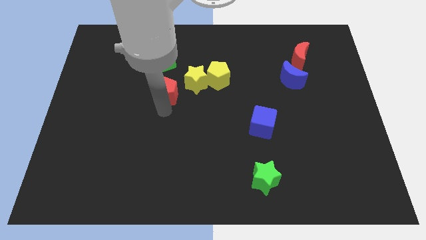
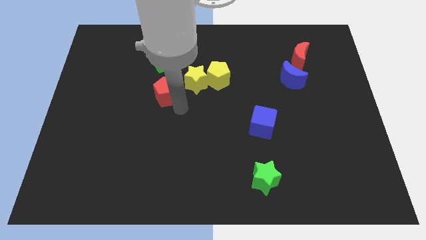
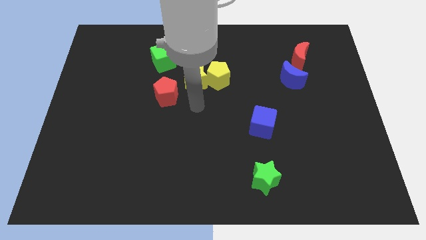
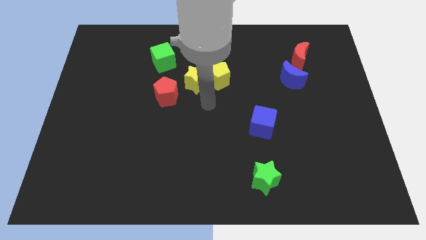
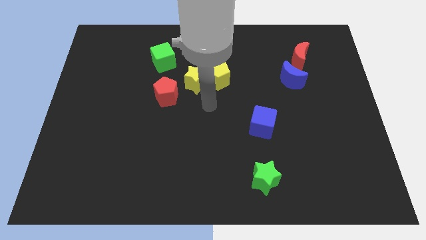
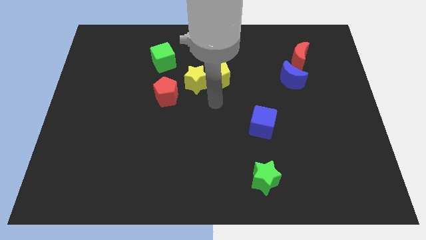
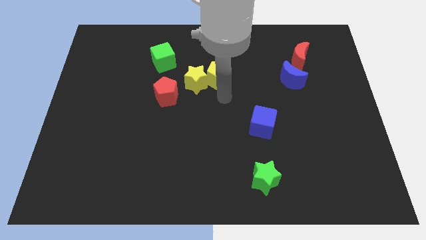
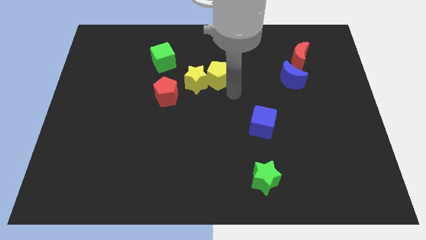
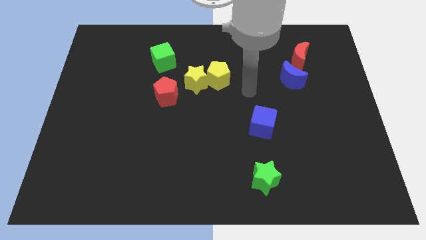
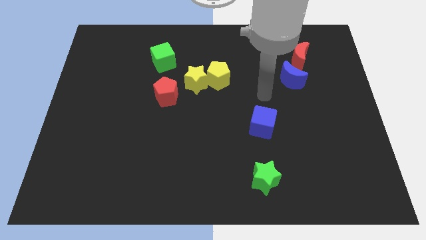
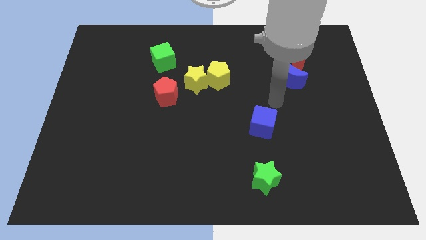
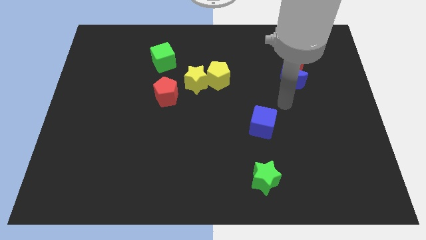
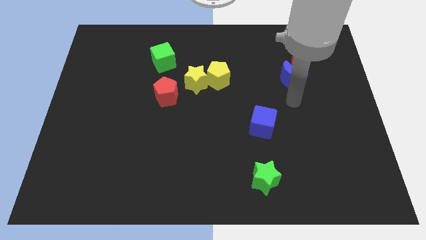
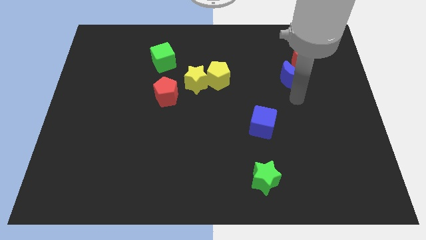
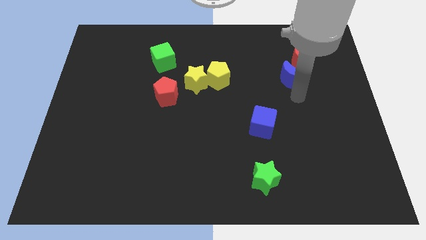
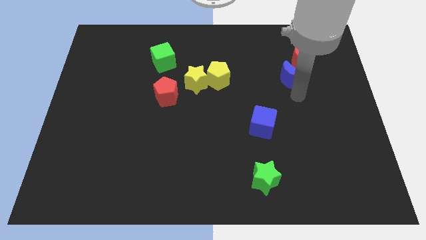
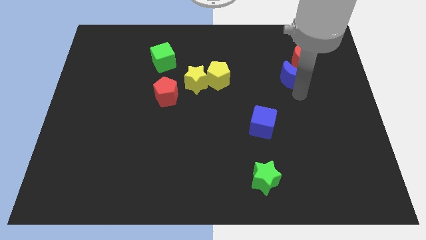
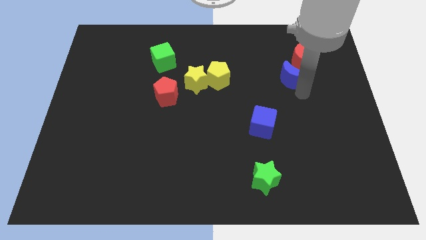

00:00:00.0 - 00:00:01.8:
move your arm towards blue crescent

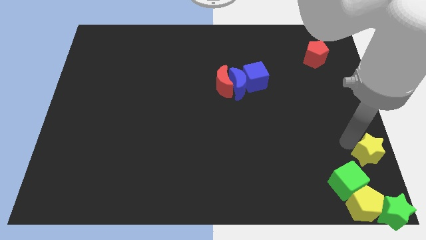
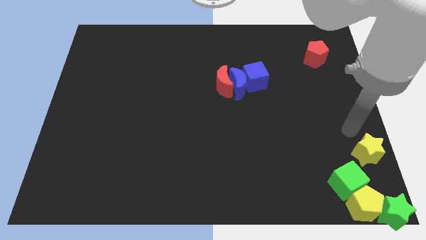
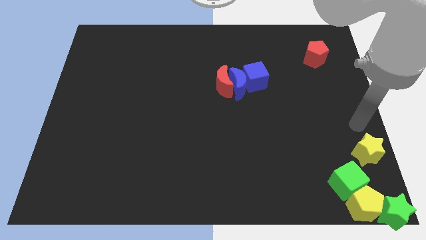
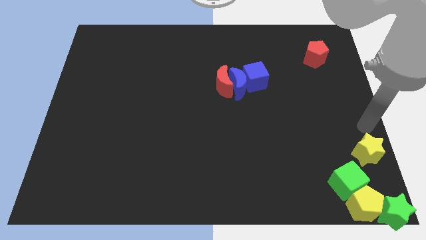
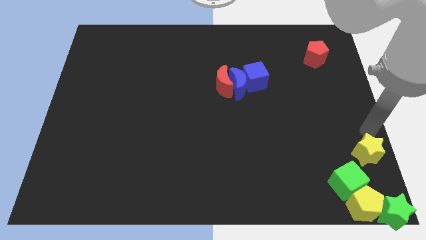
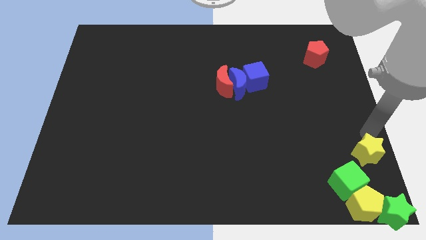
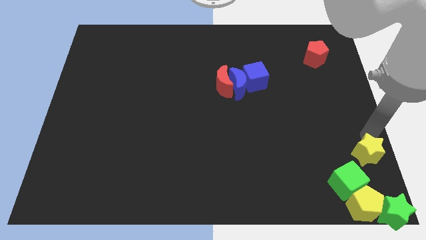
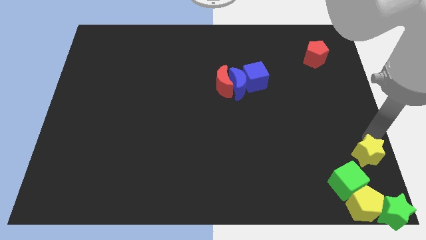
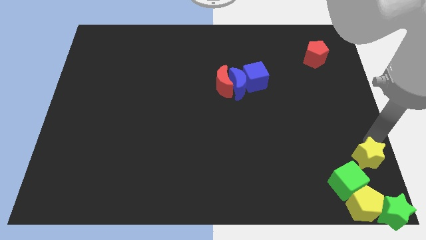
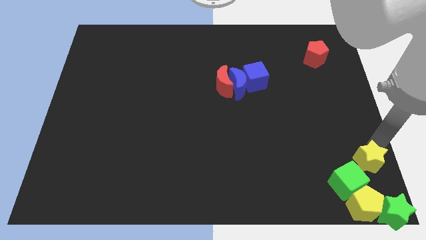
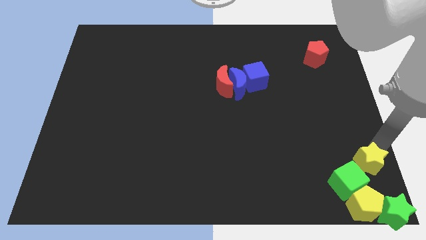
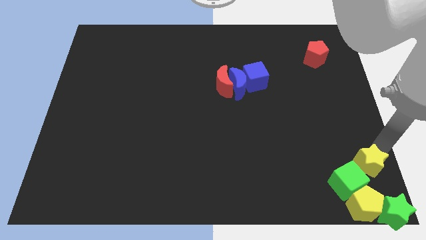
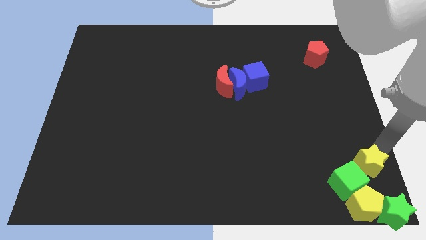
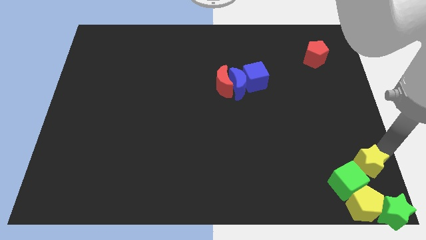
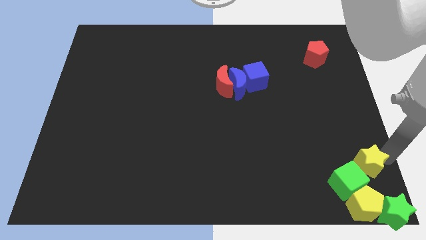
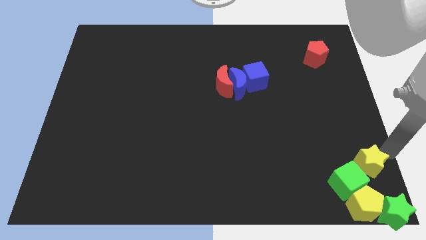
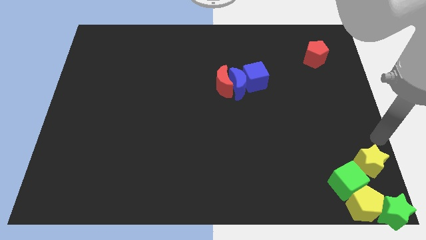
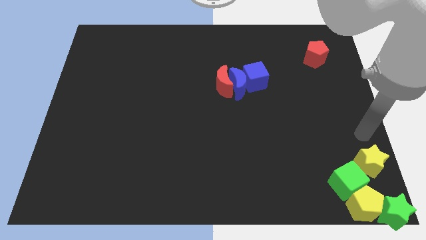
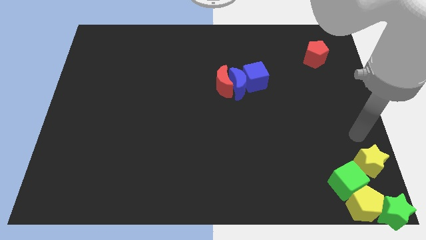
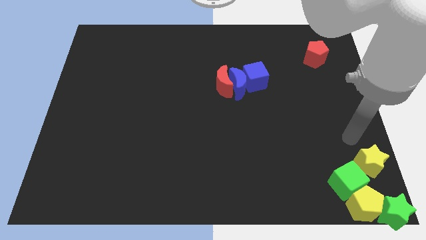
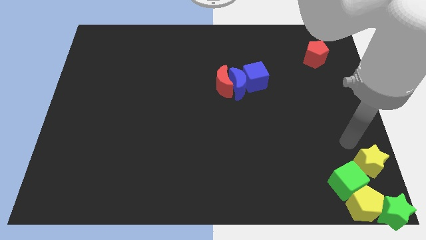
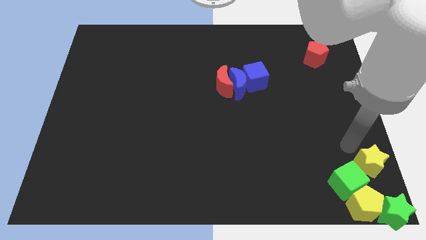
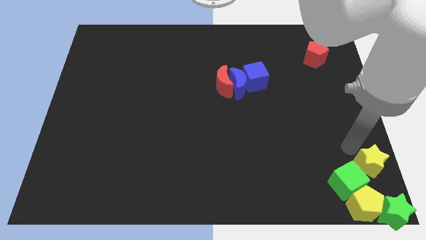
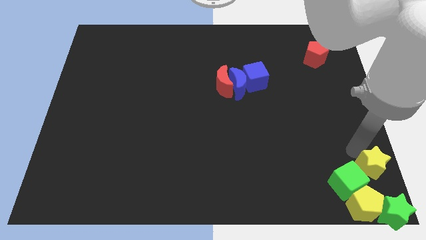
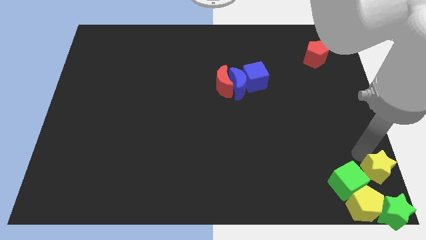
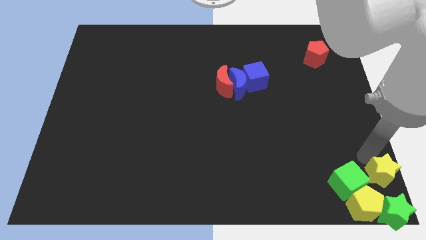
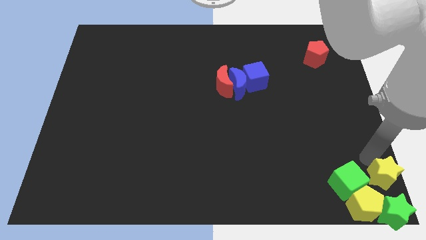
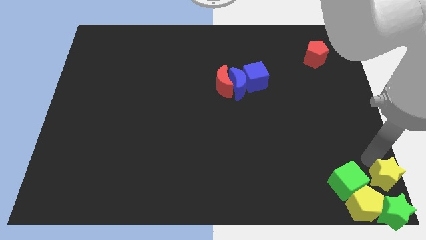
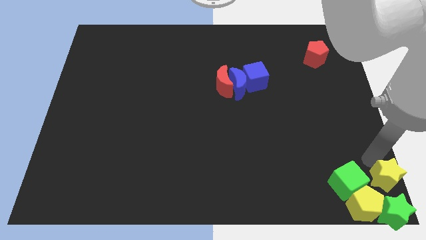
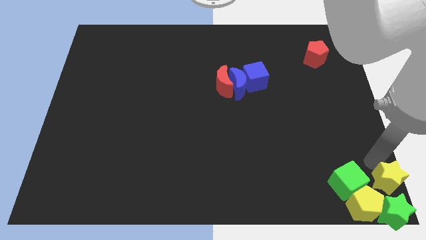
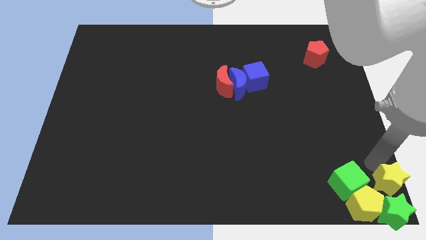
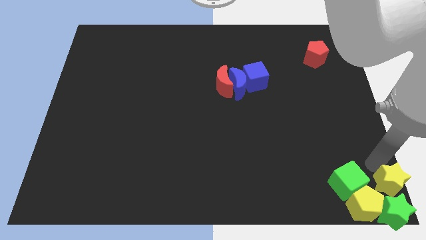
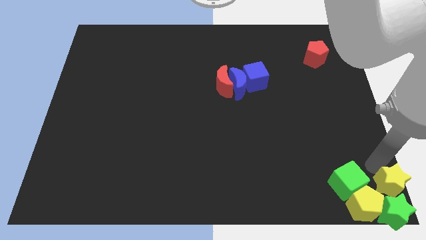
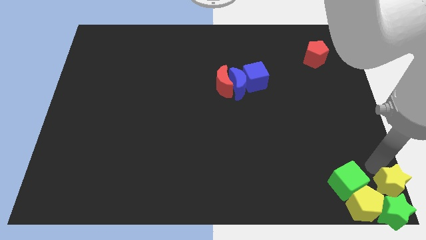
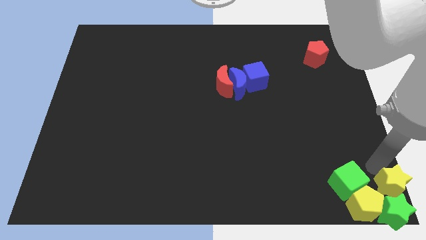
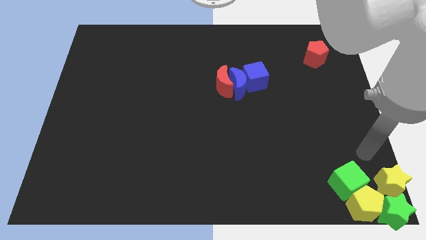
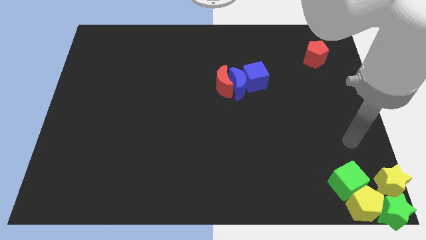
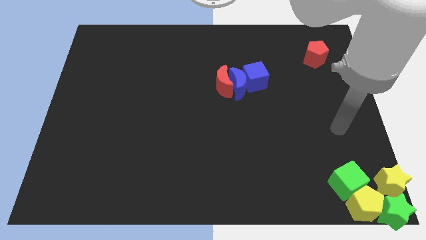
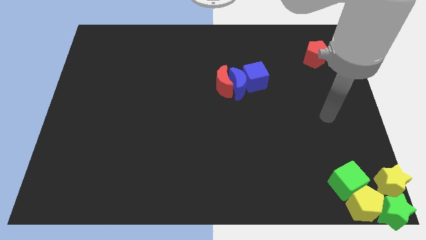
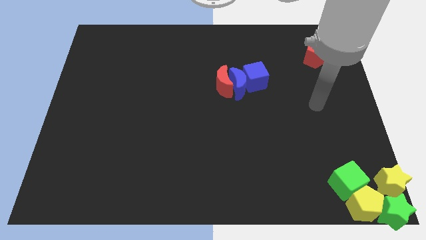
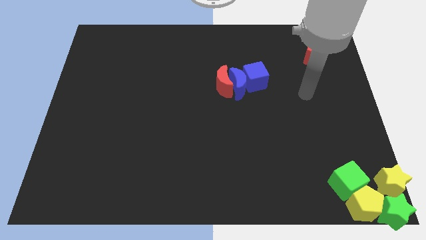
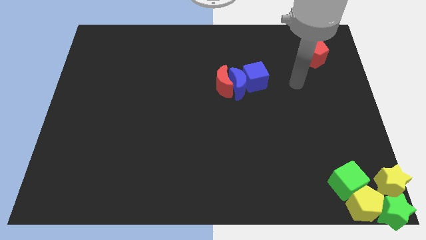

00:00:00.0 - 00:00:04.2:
move the yellow star above the green star

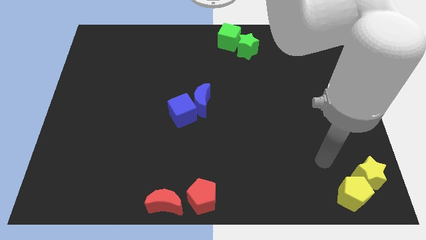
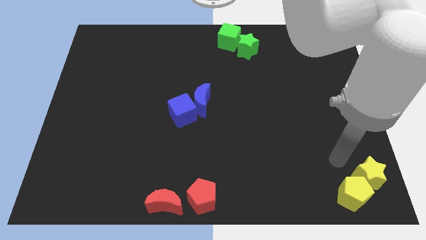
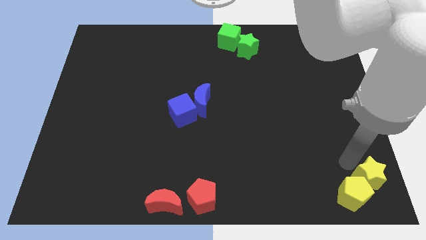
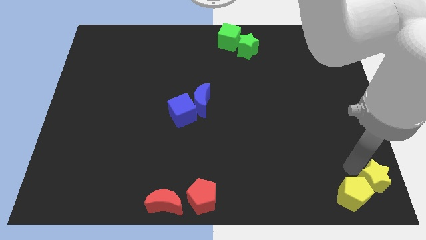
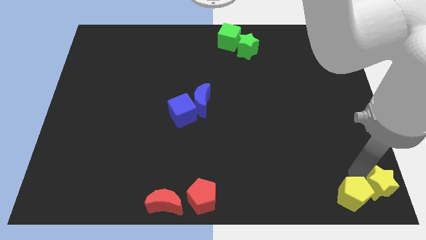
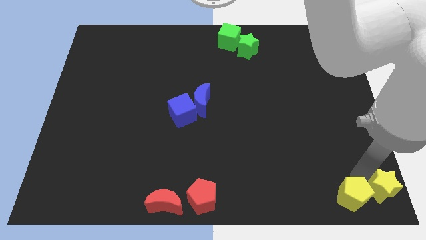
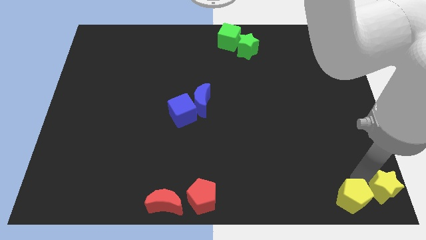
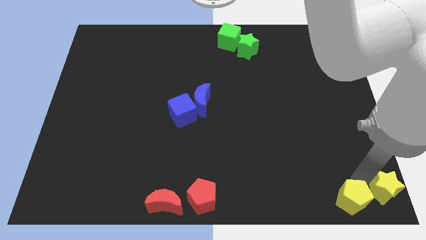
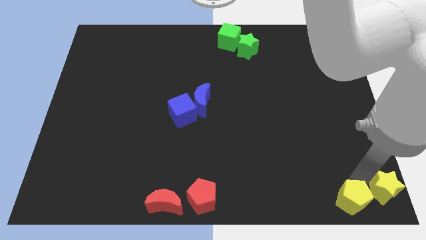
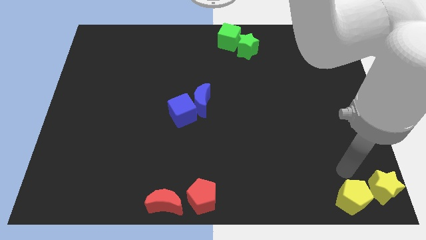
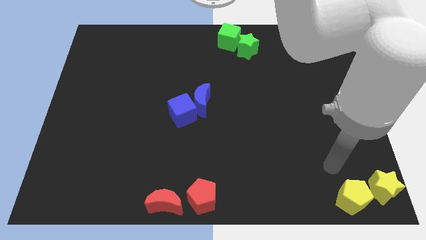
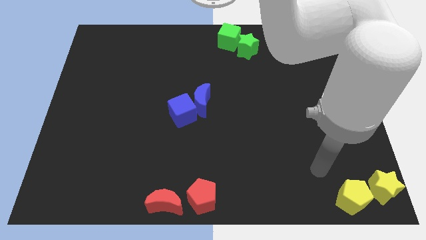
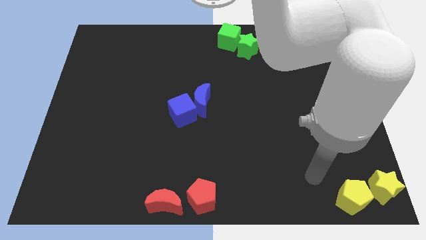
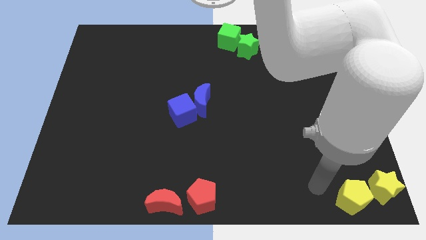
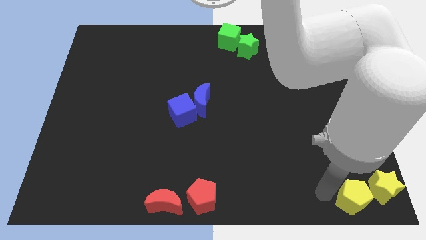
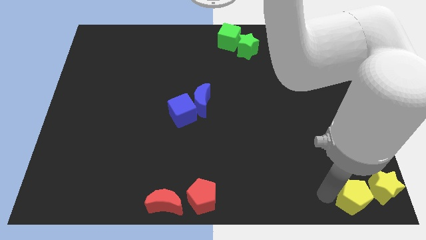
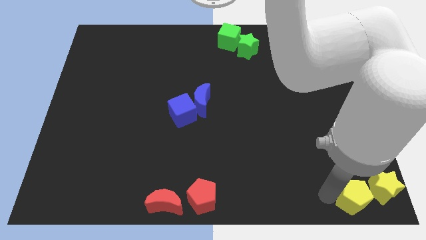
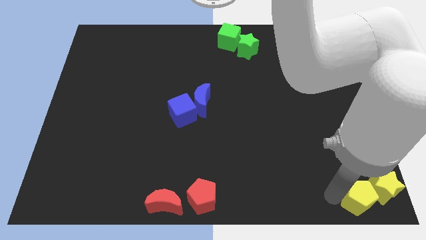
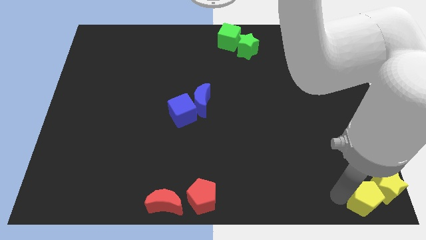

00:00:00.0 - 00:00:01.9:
place yellow pentagon and yellow star to the bottom right of the board

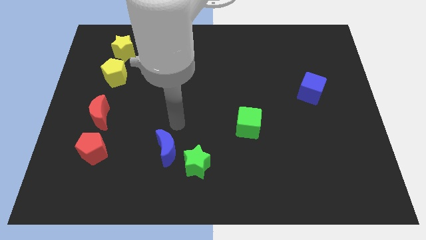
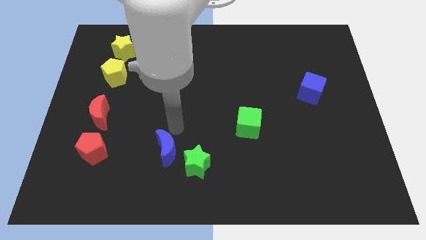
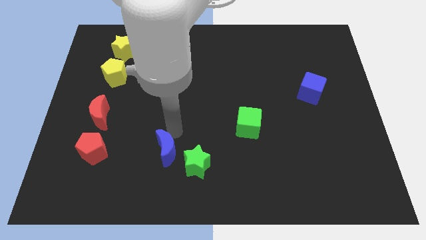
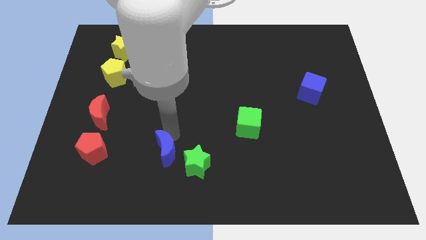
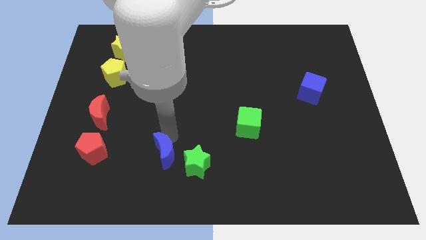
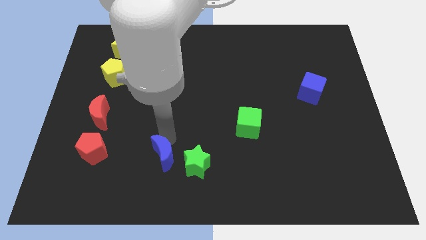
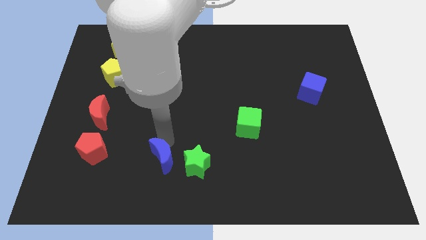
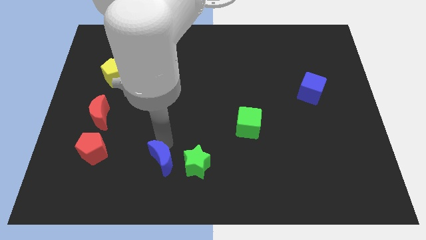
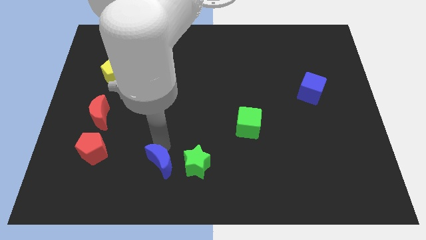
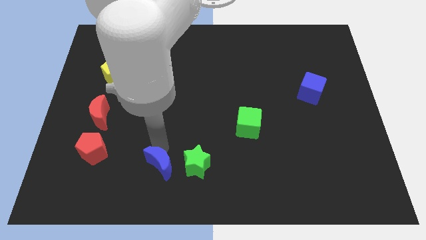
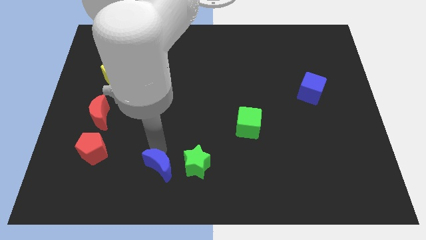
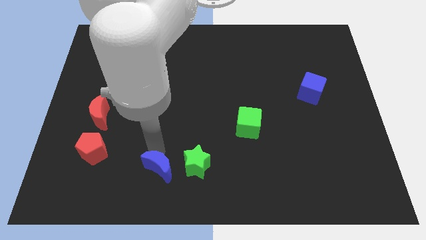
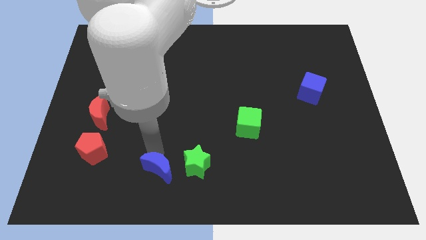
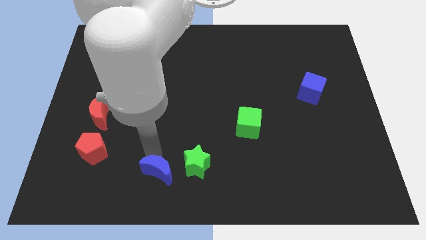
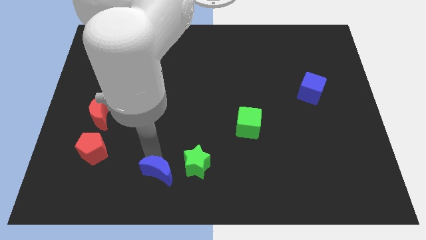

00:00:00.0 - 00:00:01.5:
push the blue crescent slightly to the bottom
